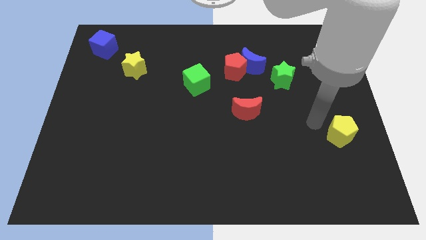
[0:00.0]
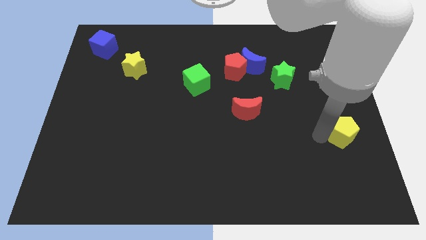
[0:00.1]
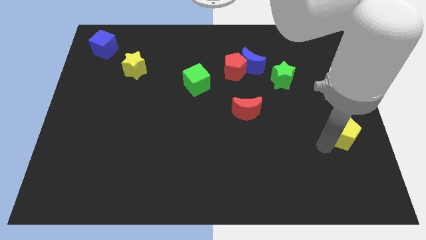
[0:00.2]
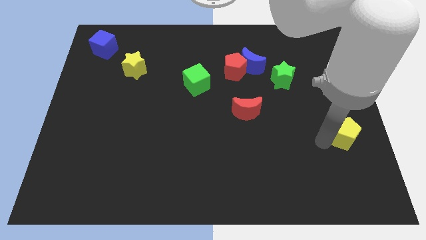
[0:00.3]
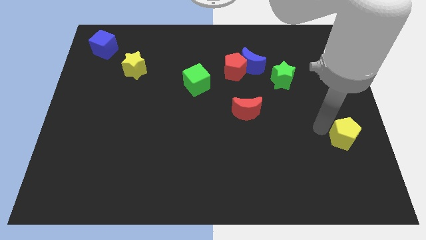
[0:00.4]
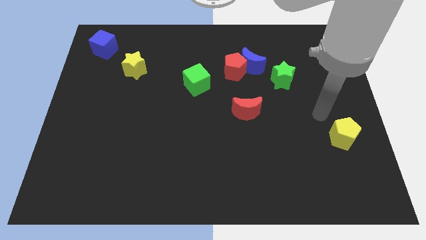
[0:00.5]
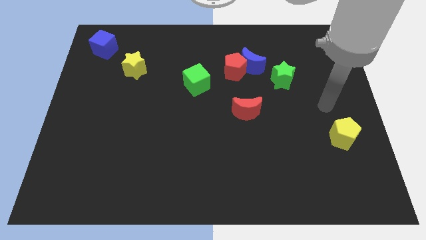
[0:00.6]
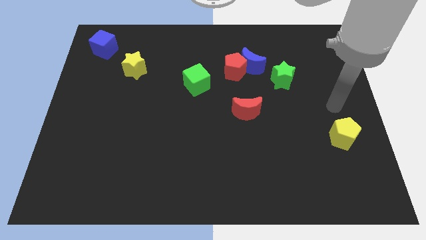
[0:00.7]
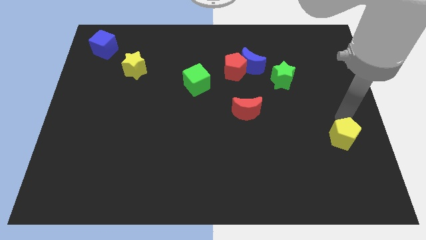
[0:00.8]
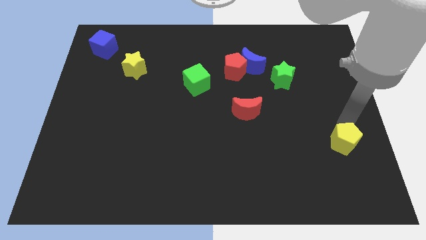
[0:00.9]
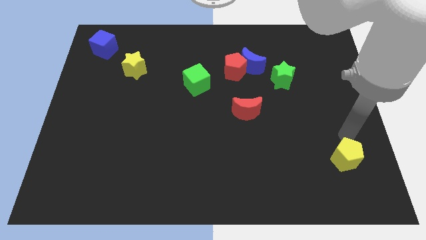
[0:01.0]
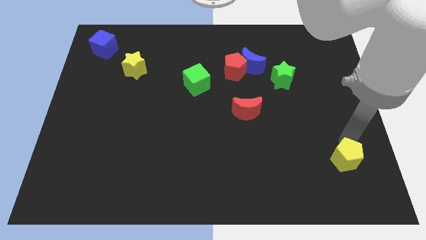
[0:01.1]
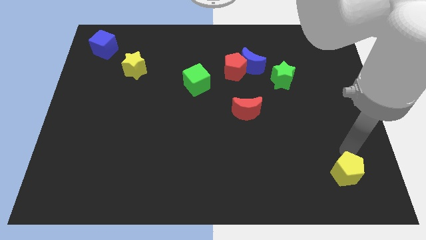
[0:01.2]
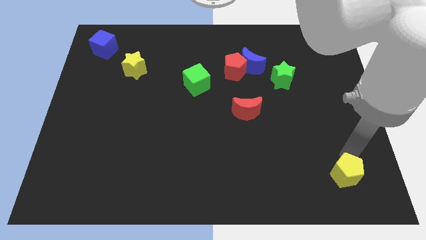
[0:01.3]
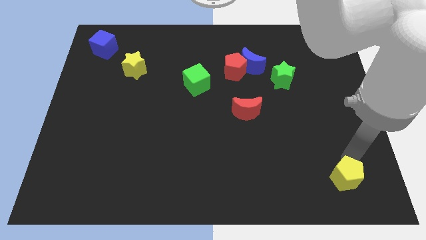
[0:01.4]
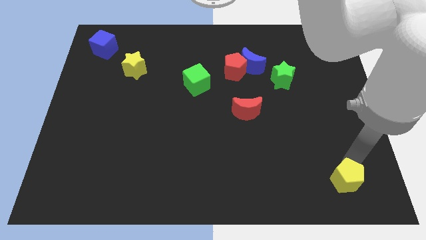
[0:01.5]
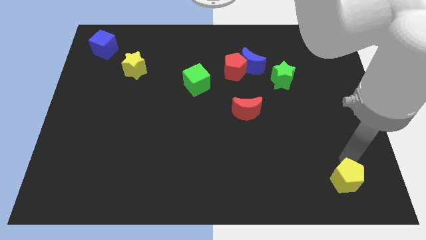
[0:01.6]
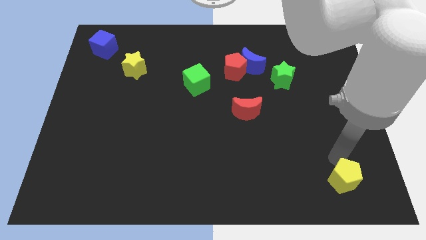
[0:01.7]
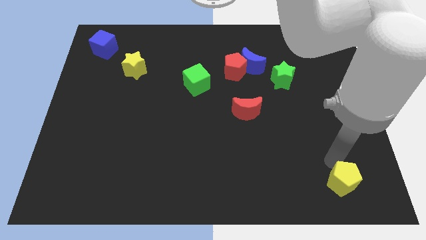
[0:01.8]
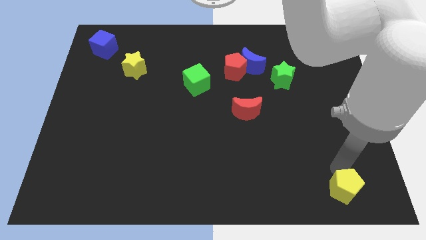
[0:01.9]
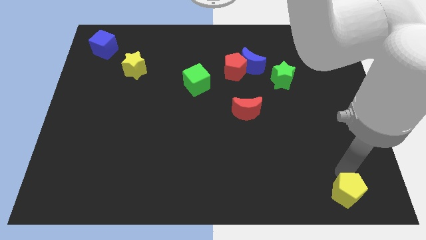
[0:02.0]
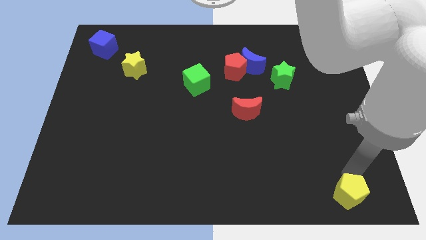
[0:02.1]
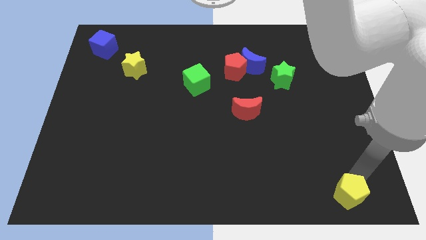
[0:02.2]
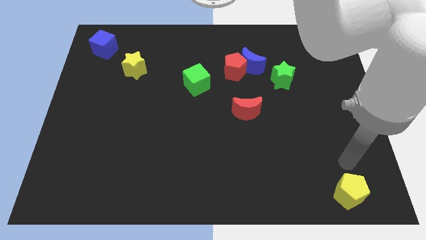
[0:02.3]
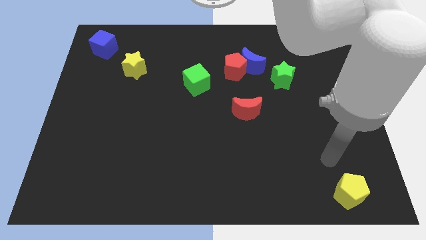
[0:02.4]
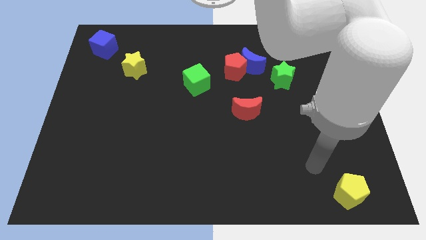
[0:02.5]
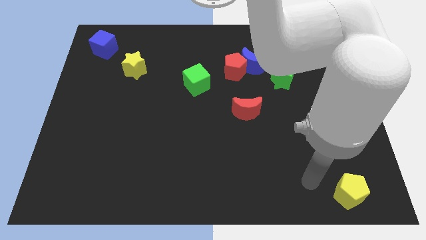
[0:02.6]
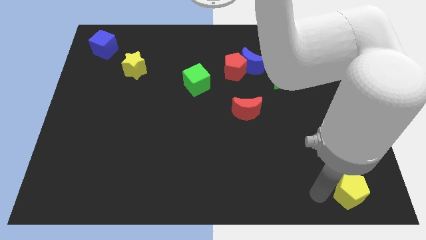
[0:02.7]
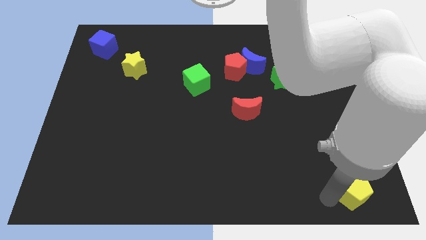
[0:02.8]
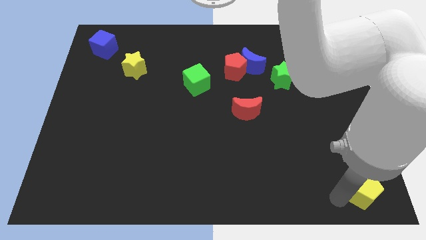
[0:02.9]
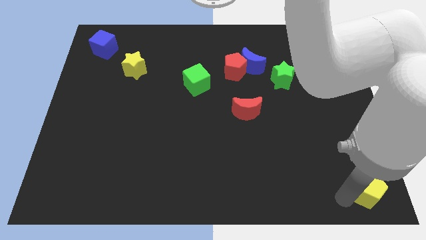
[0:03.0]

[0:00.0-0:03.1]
move the yellow pentagon to the bottom right side of the board

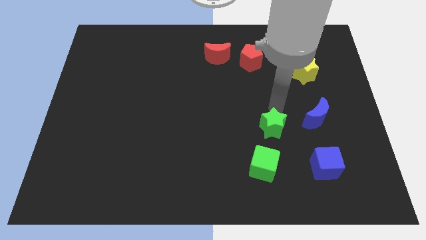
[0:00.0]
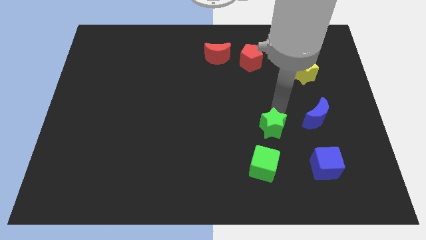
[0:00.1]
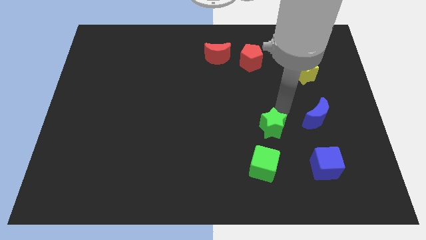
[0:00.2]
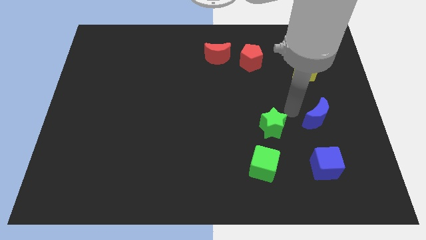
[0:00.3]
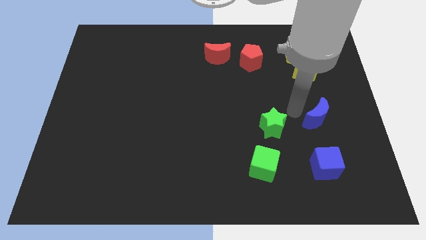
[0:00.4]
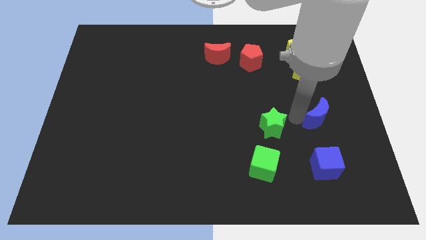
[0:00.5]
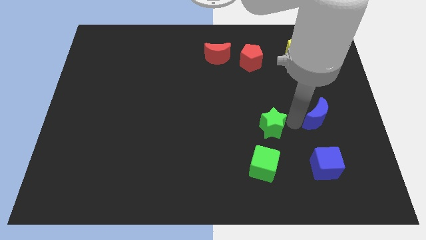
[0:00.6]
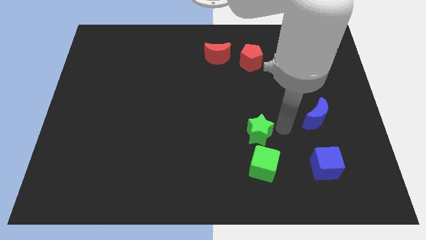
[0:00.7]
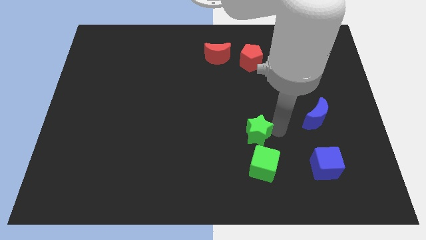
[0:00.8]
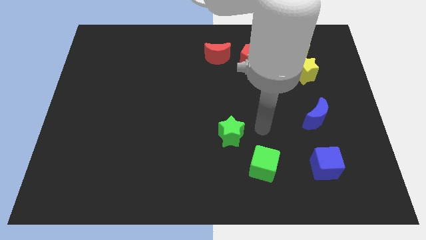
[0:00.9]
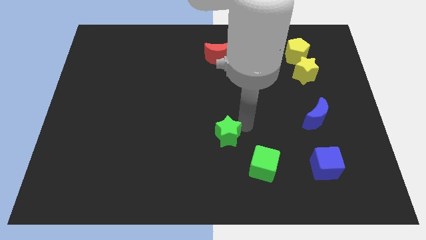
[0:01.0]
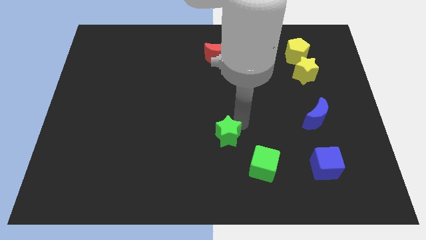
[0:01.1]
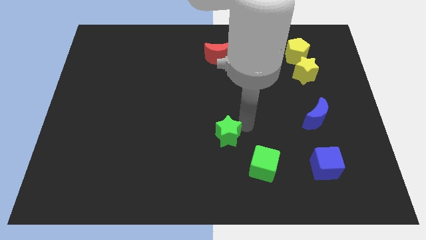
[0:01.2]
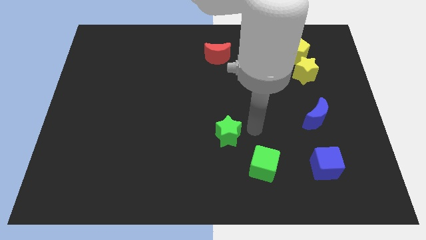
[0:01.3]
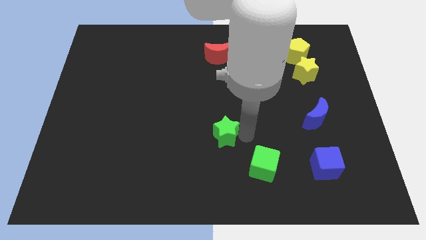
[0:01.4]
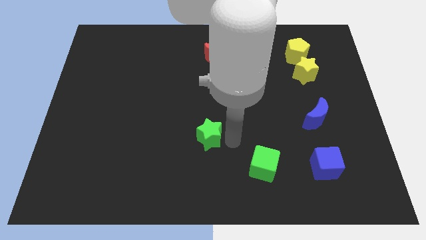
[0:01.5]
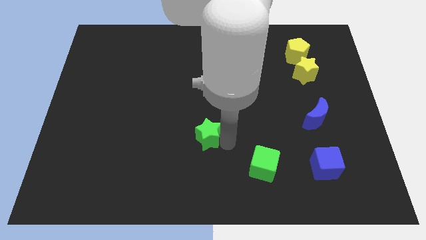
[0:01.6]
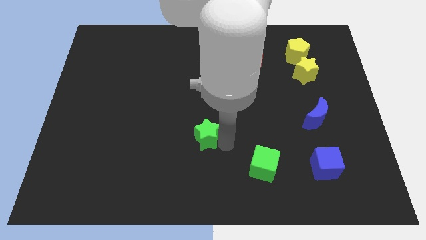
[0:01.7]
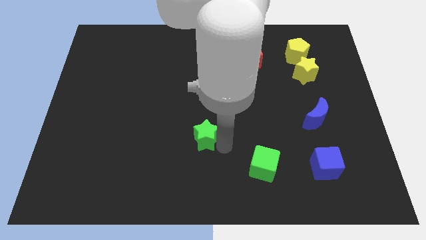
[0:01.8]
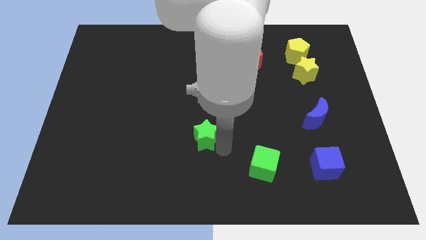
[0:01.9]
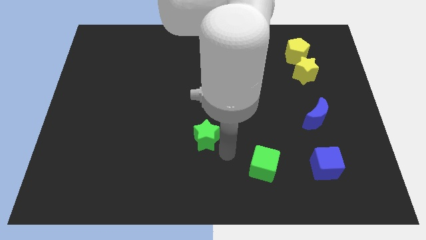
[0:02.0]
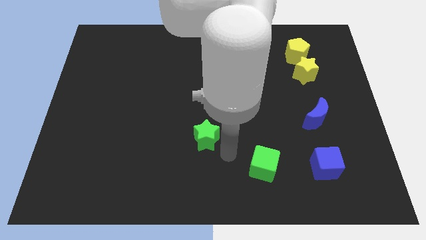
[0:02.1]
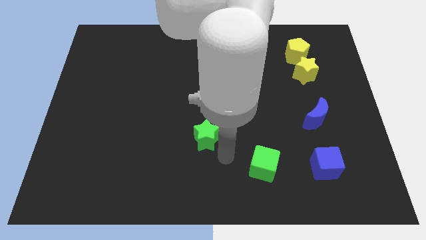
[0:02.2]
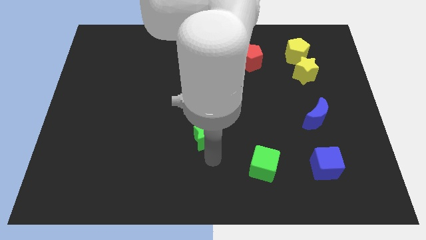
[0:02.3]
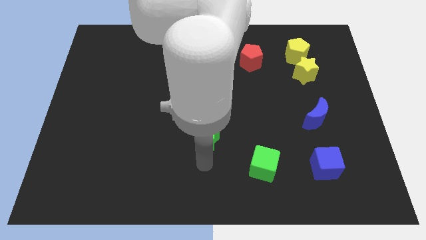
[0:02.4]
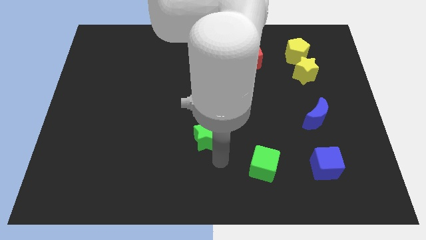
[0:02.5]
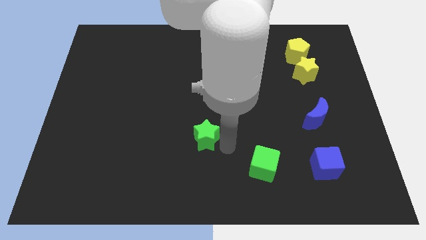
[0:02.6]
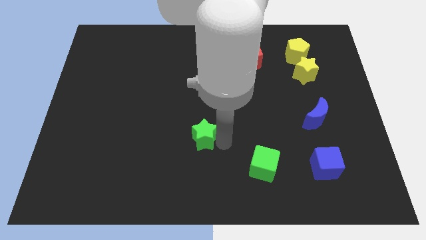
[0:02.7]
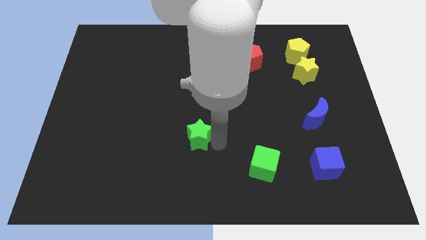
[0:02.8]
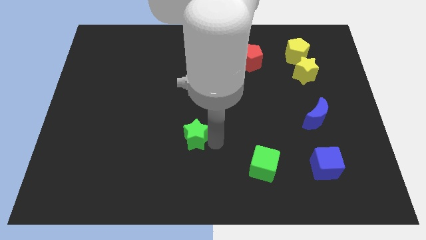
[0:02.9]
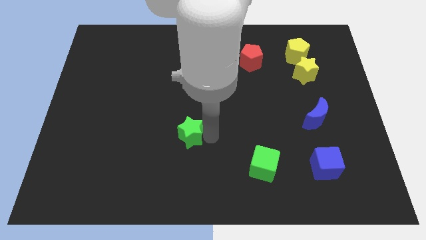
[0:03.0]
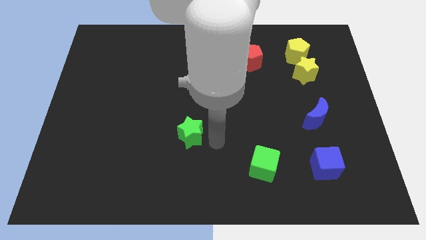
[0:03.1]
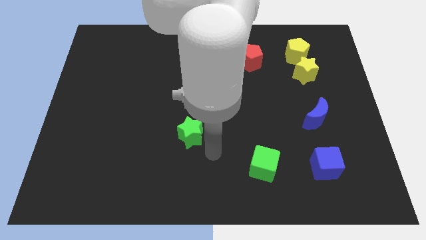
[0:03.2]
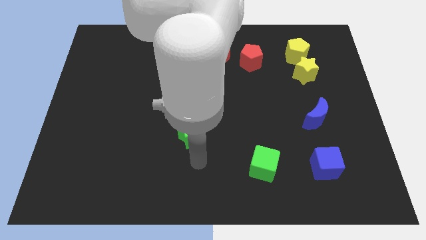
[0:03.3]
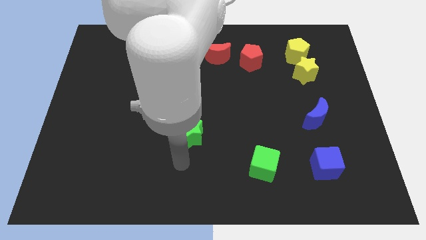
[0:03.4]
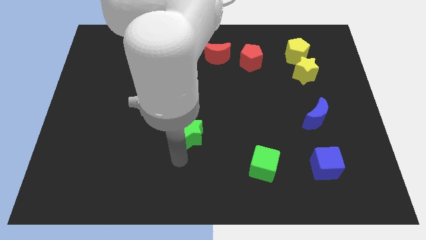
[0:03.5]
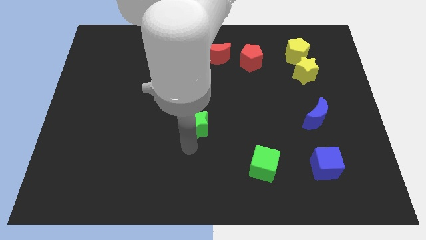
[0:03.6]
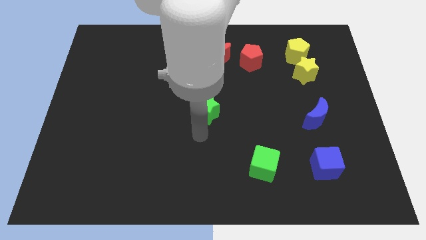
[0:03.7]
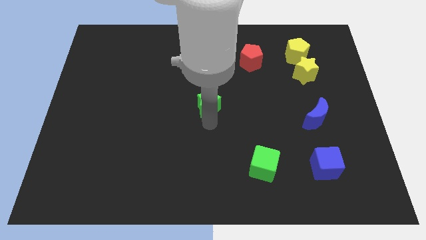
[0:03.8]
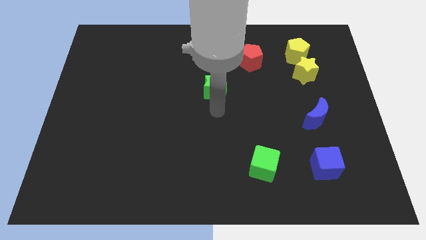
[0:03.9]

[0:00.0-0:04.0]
place the green star below the red moon

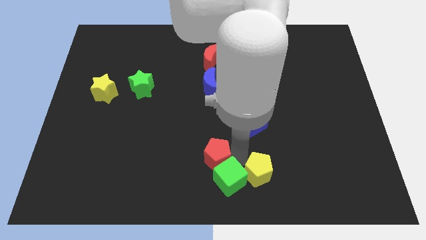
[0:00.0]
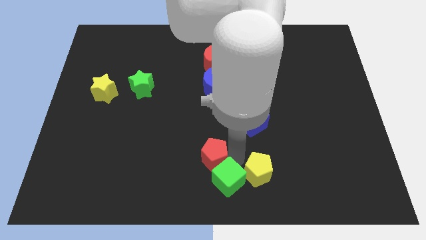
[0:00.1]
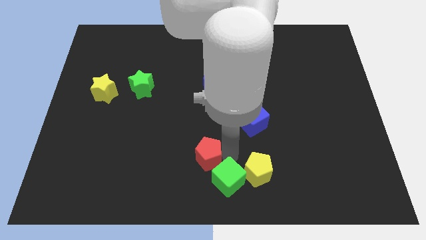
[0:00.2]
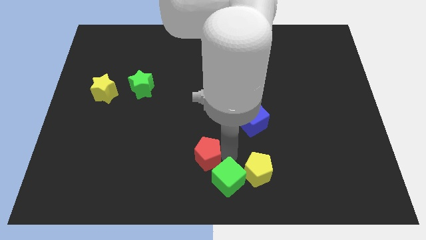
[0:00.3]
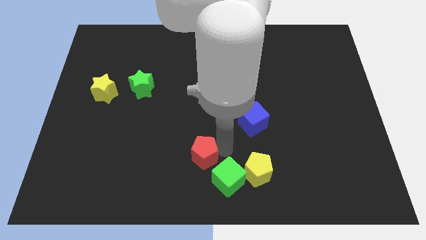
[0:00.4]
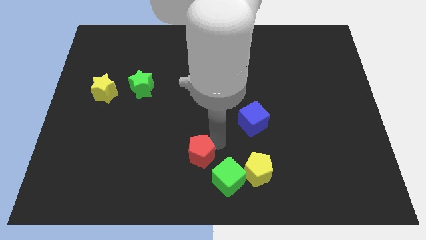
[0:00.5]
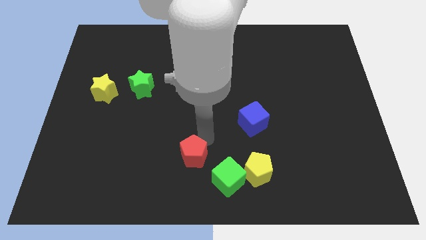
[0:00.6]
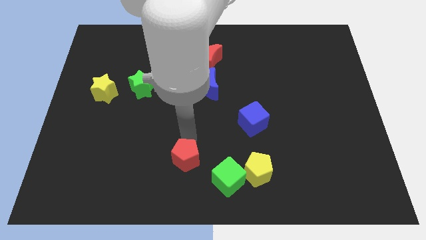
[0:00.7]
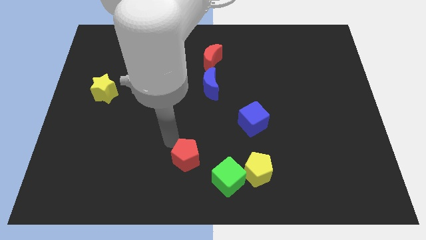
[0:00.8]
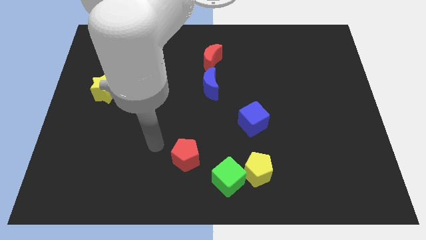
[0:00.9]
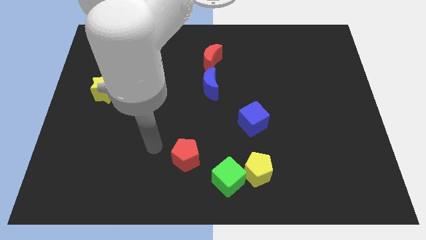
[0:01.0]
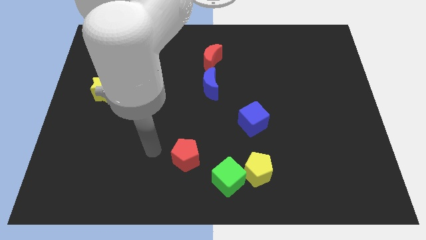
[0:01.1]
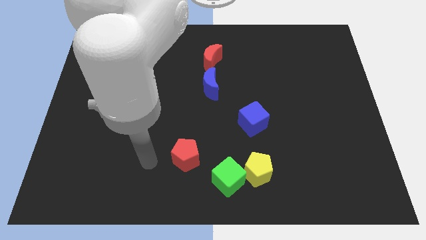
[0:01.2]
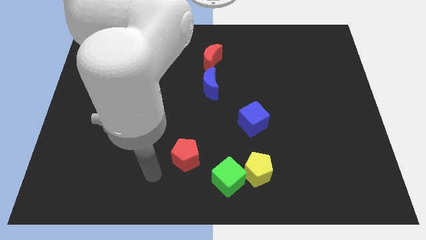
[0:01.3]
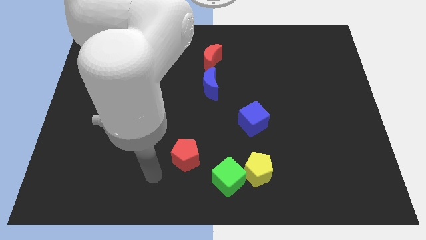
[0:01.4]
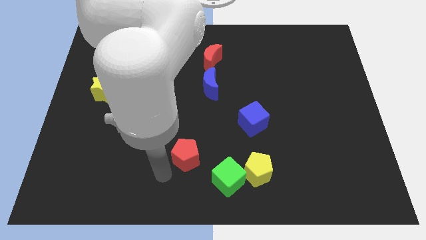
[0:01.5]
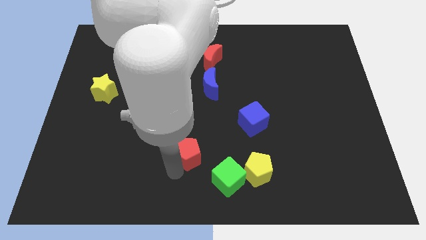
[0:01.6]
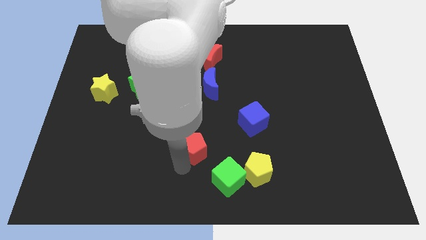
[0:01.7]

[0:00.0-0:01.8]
separate the red pentagon from the green cube

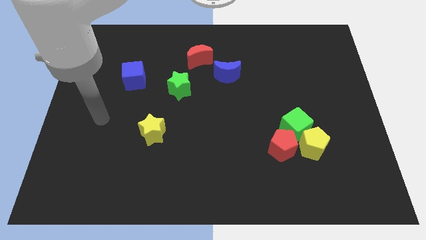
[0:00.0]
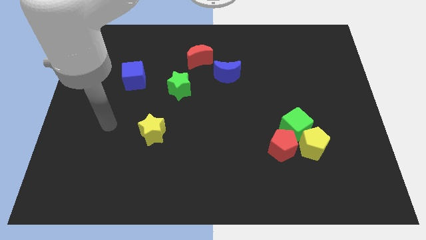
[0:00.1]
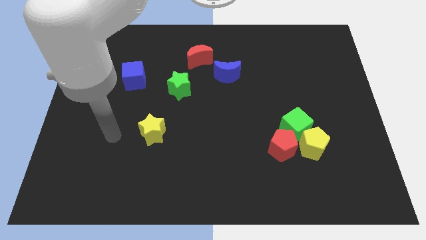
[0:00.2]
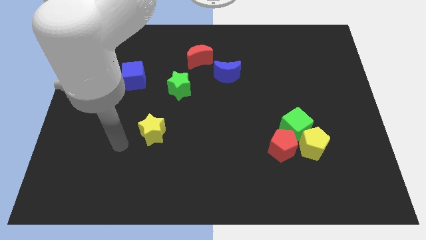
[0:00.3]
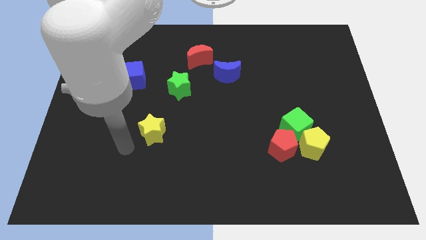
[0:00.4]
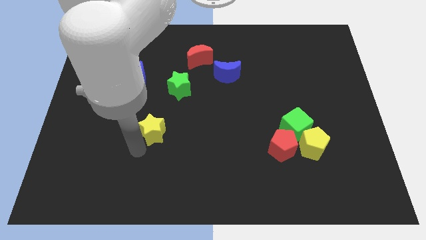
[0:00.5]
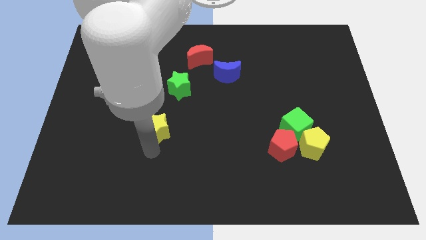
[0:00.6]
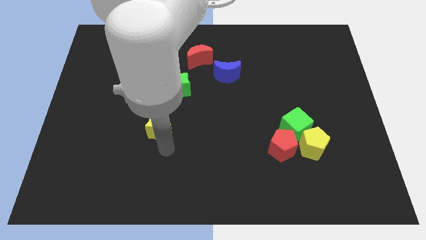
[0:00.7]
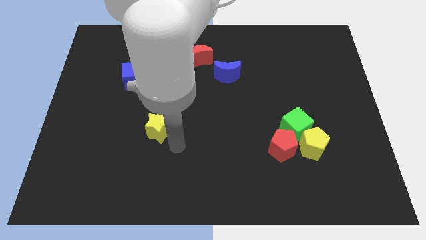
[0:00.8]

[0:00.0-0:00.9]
slightly touch down to the yellow star
